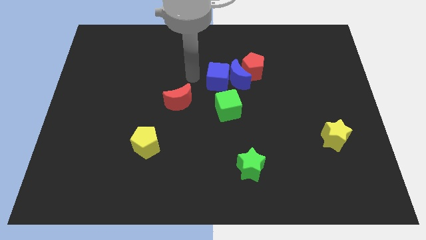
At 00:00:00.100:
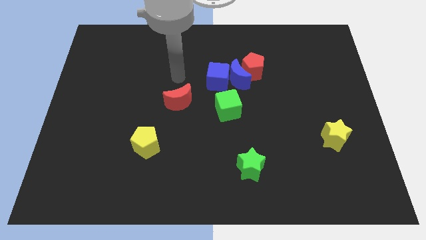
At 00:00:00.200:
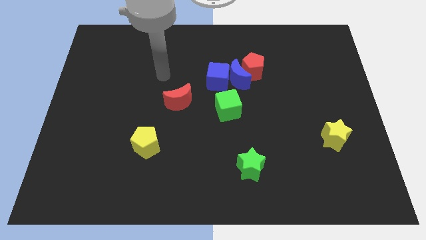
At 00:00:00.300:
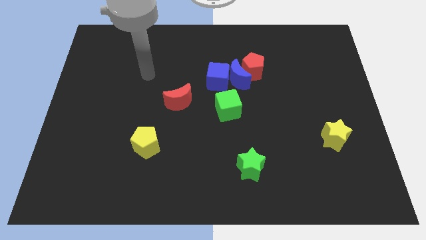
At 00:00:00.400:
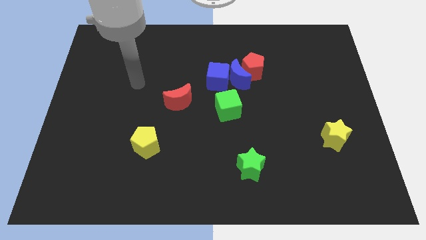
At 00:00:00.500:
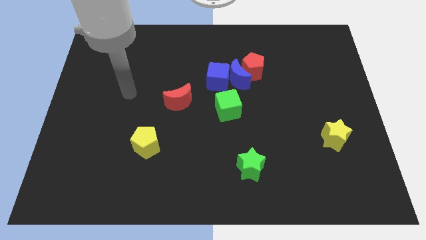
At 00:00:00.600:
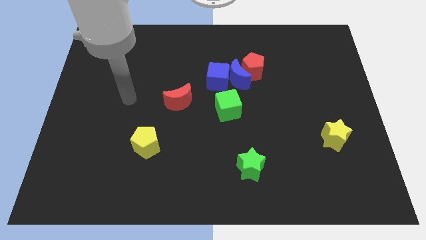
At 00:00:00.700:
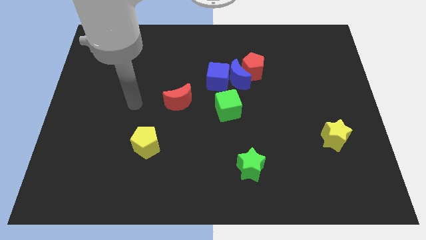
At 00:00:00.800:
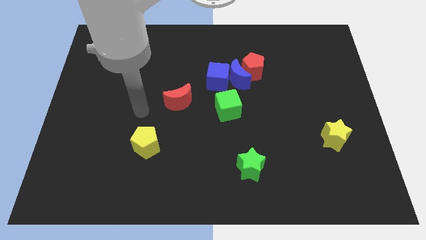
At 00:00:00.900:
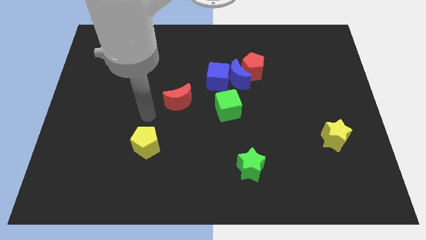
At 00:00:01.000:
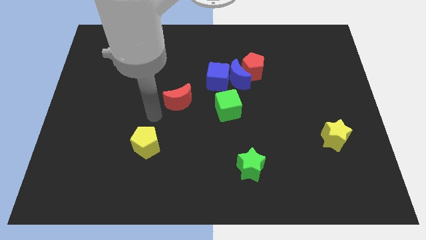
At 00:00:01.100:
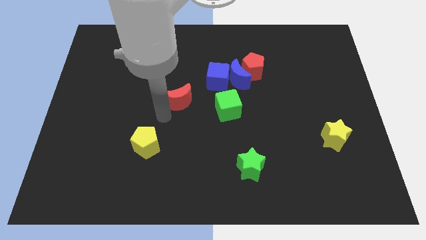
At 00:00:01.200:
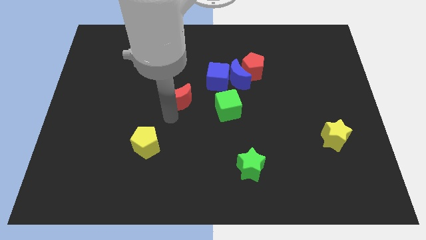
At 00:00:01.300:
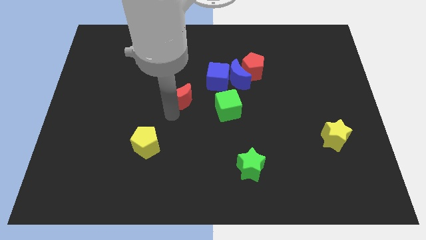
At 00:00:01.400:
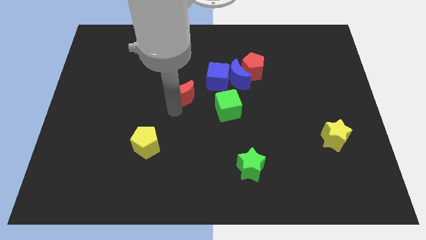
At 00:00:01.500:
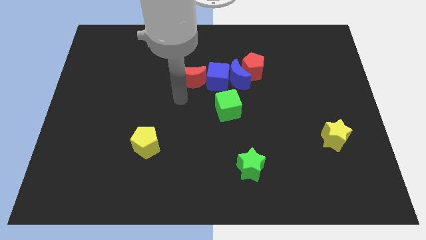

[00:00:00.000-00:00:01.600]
put the red moon left to the blue cube

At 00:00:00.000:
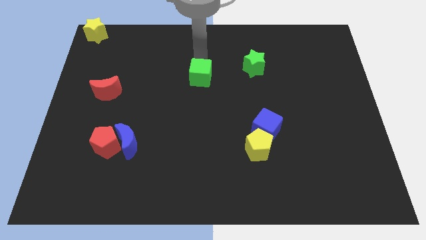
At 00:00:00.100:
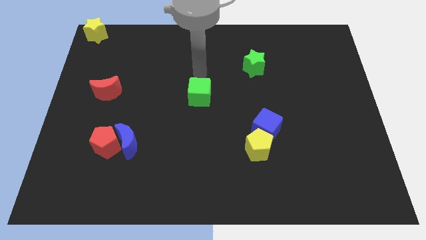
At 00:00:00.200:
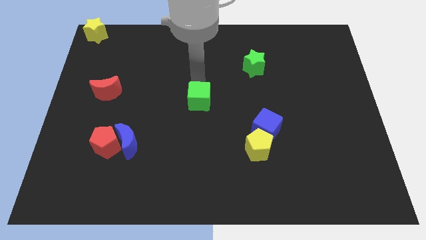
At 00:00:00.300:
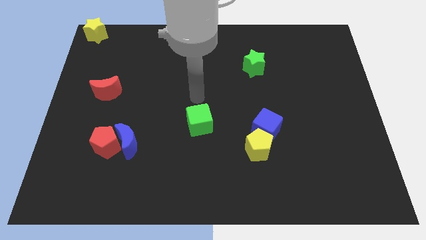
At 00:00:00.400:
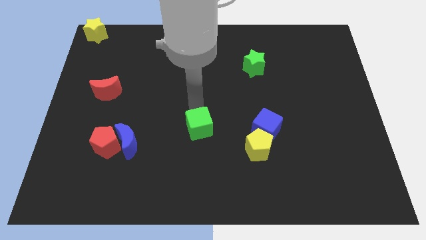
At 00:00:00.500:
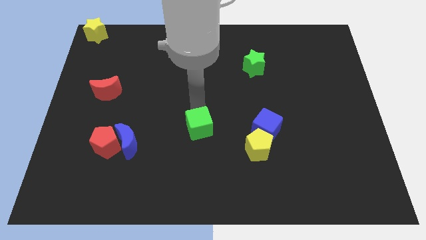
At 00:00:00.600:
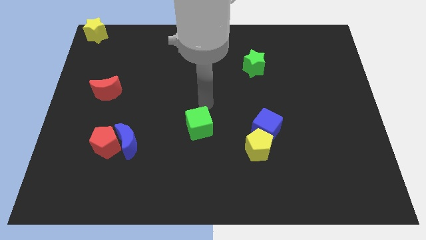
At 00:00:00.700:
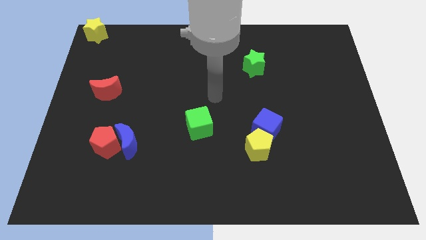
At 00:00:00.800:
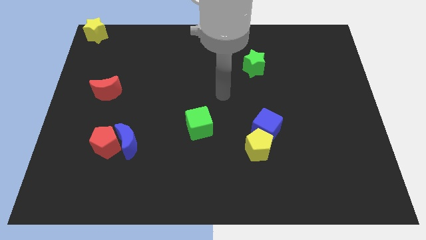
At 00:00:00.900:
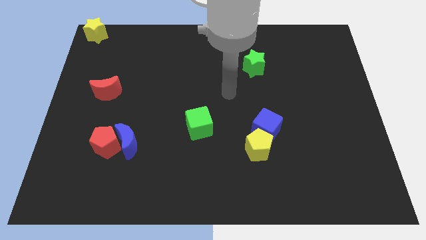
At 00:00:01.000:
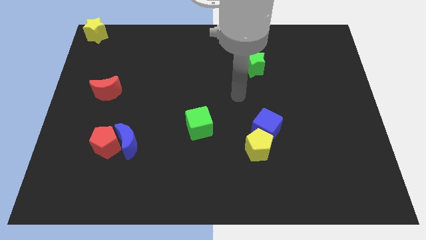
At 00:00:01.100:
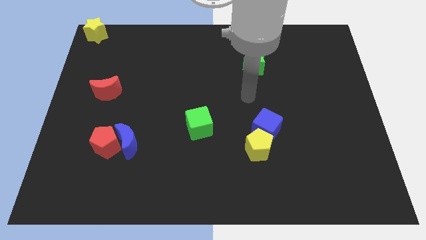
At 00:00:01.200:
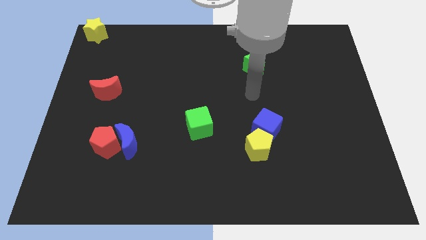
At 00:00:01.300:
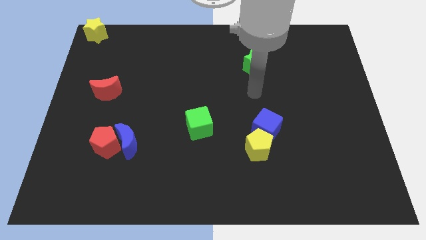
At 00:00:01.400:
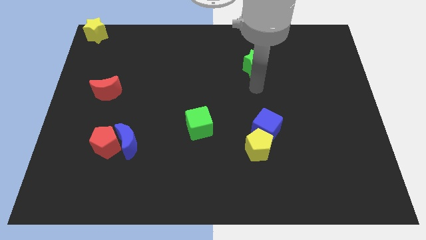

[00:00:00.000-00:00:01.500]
push the green cube to the bottom of the board

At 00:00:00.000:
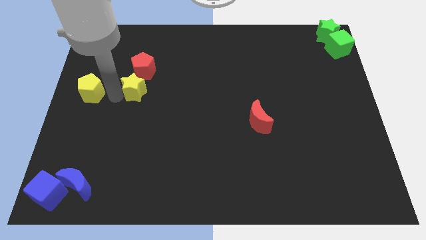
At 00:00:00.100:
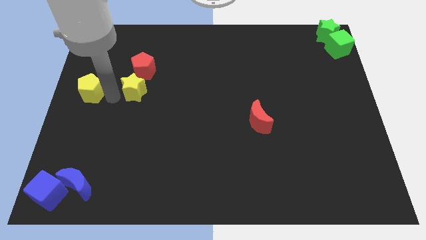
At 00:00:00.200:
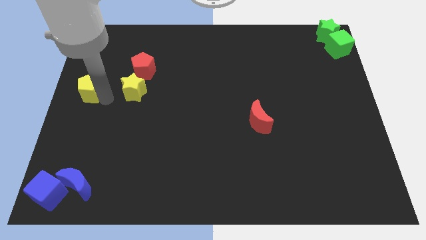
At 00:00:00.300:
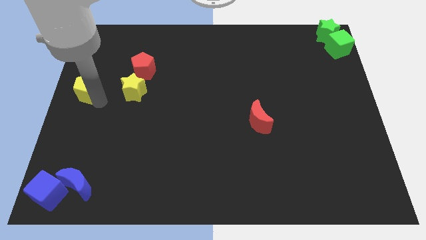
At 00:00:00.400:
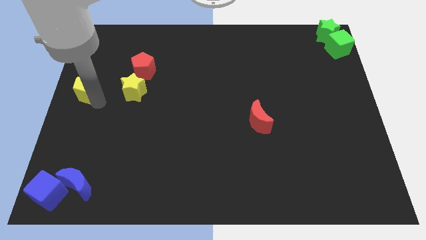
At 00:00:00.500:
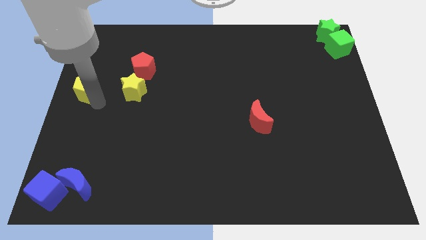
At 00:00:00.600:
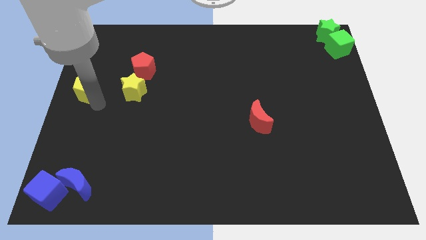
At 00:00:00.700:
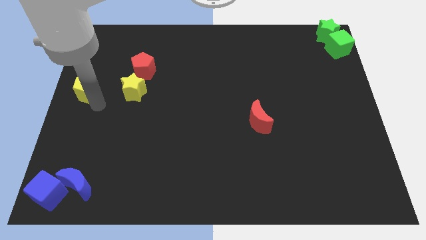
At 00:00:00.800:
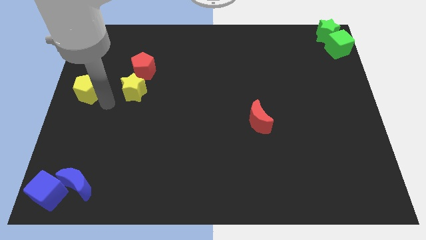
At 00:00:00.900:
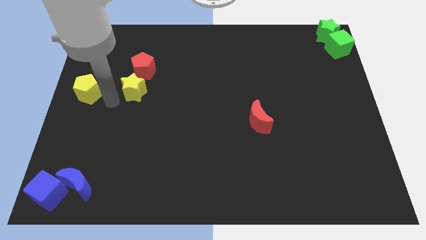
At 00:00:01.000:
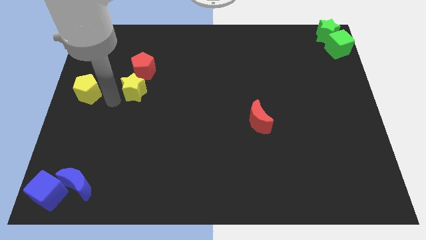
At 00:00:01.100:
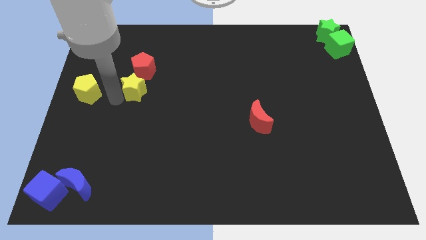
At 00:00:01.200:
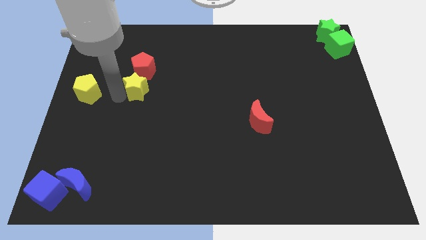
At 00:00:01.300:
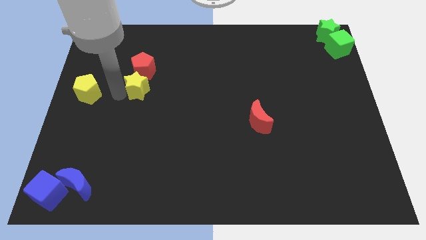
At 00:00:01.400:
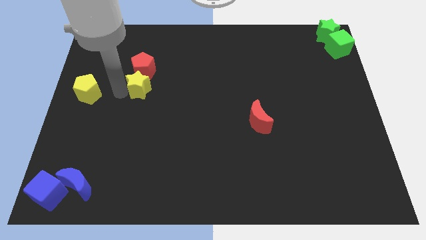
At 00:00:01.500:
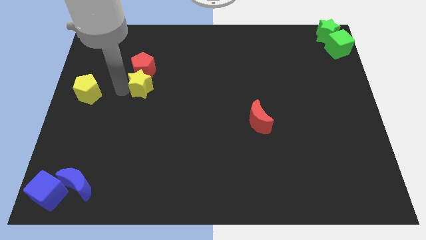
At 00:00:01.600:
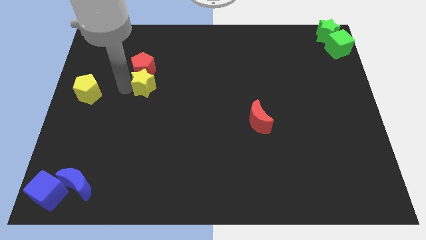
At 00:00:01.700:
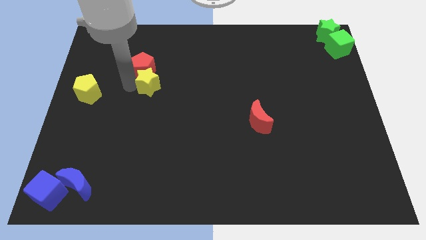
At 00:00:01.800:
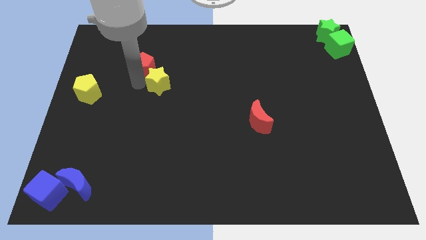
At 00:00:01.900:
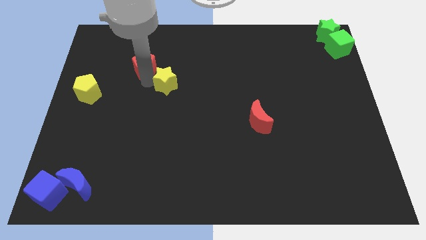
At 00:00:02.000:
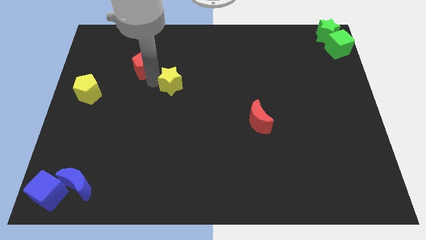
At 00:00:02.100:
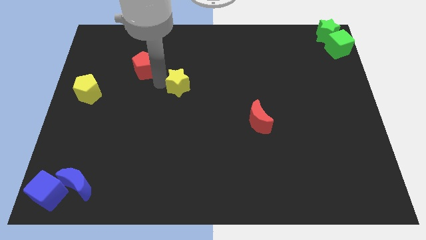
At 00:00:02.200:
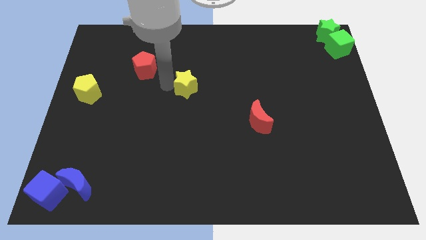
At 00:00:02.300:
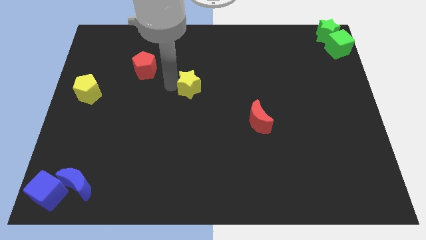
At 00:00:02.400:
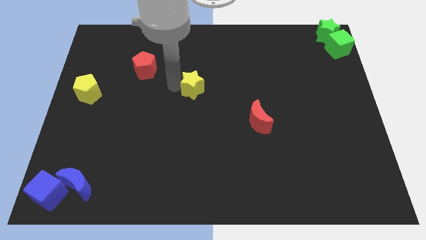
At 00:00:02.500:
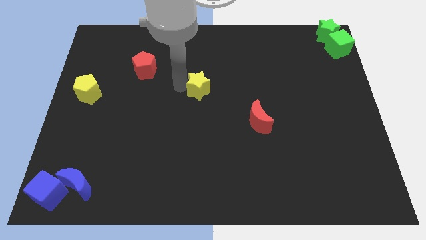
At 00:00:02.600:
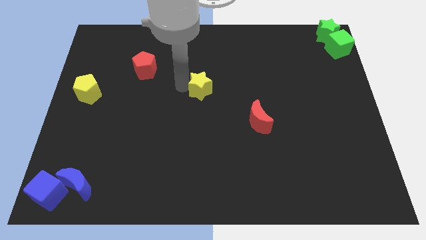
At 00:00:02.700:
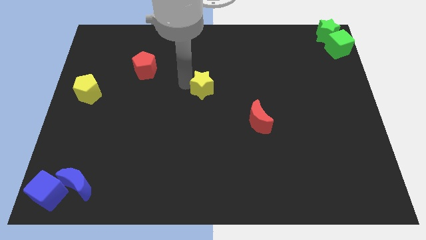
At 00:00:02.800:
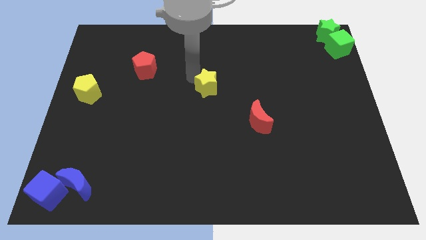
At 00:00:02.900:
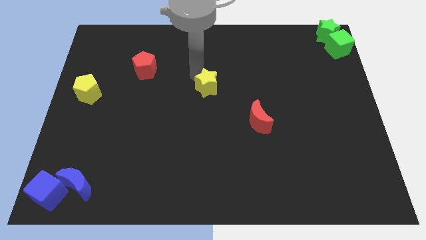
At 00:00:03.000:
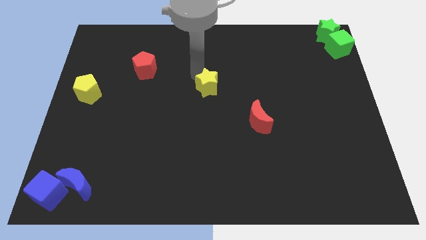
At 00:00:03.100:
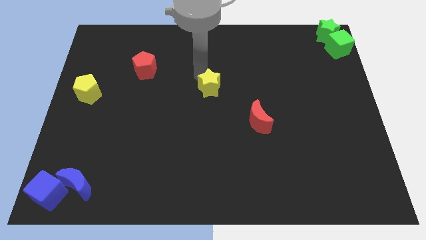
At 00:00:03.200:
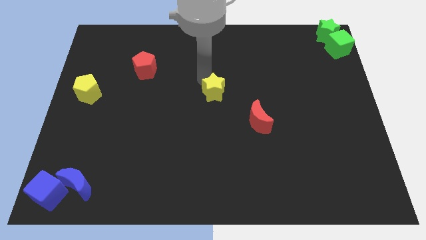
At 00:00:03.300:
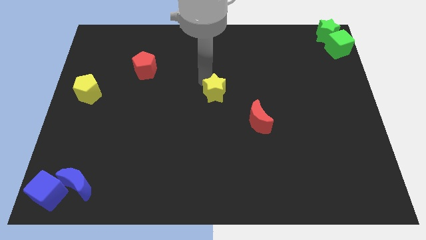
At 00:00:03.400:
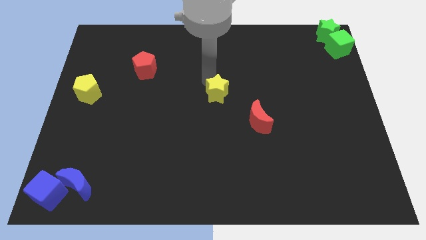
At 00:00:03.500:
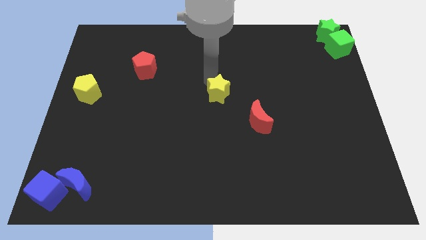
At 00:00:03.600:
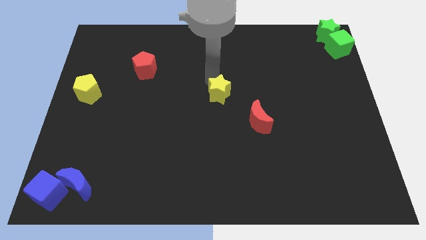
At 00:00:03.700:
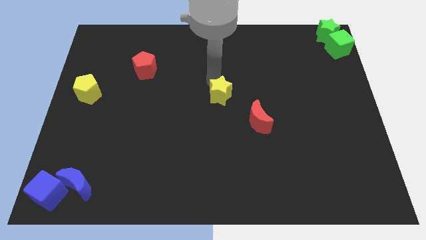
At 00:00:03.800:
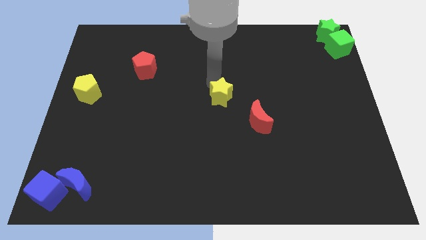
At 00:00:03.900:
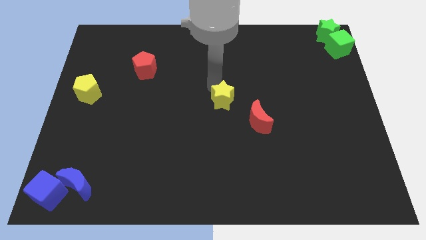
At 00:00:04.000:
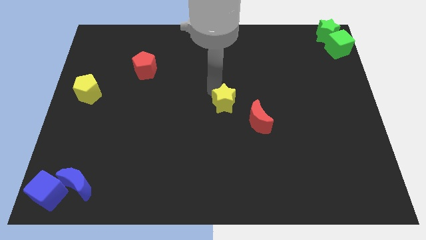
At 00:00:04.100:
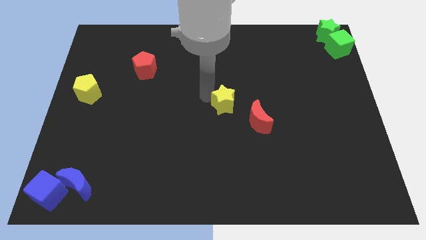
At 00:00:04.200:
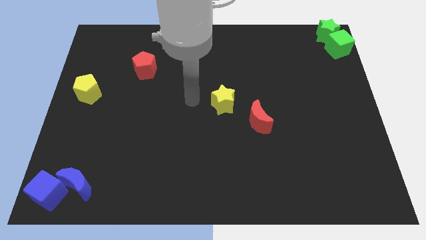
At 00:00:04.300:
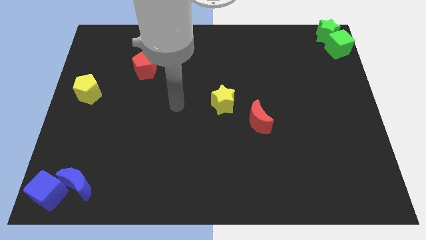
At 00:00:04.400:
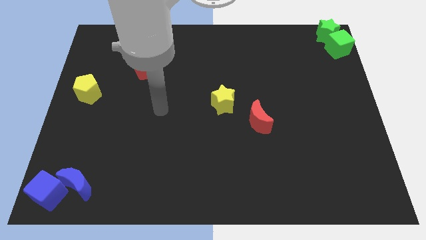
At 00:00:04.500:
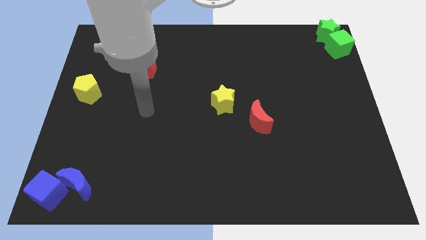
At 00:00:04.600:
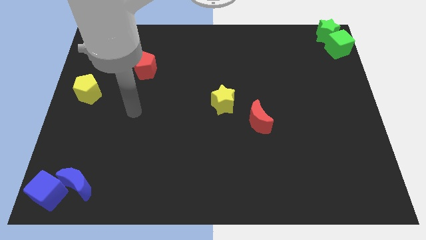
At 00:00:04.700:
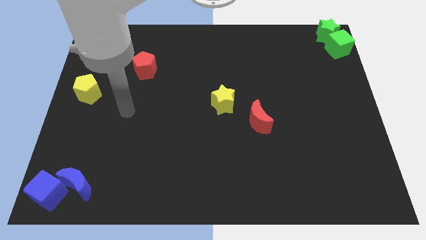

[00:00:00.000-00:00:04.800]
place the yellow star at the centre of the board

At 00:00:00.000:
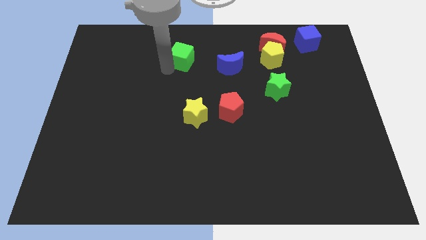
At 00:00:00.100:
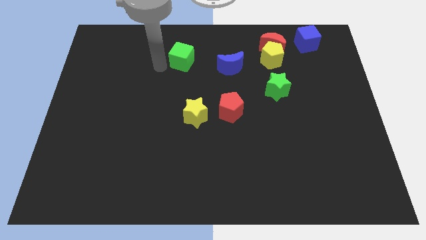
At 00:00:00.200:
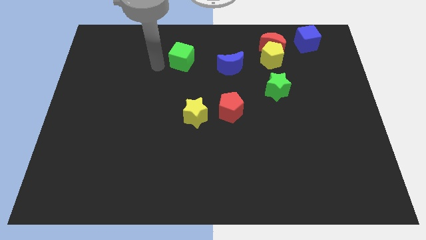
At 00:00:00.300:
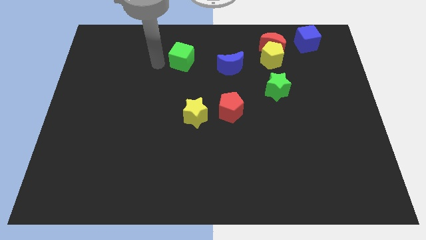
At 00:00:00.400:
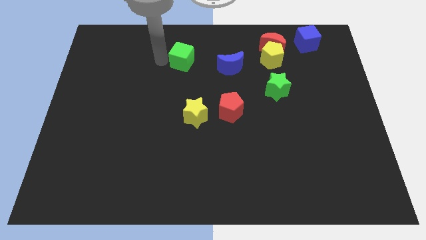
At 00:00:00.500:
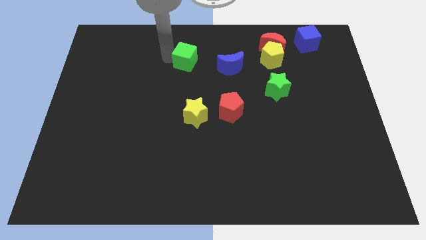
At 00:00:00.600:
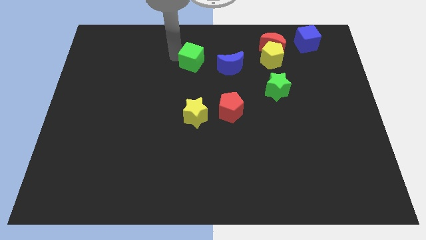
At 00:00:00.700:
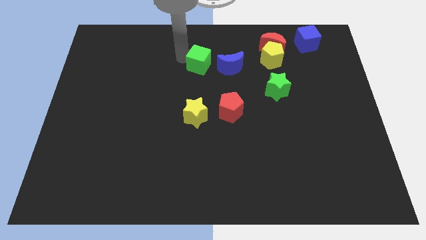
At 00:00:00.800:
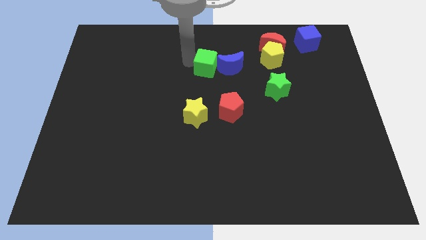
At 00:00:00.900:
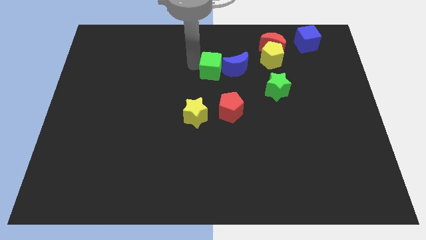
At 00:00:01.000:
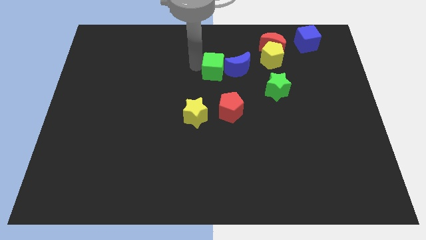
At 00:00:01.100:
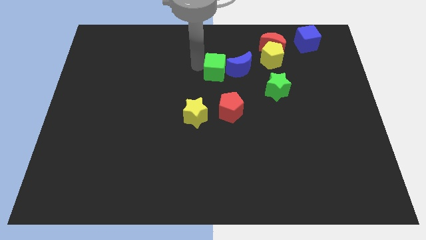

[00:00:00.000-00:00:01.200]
push the green cube and blue moon to the left side of yellow pentagon
